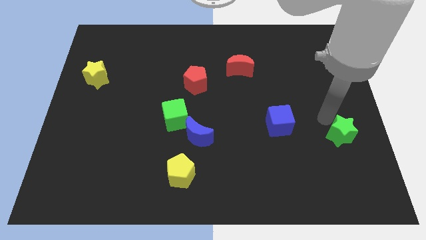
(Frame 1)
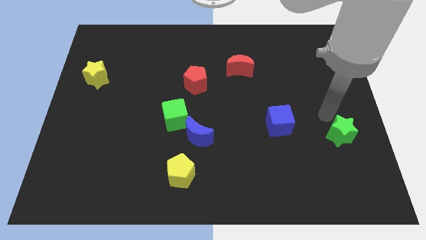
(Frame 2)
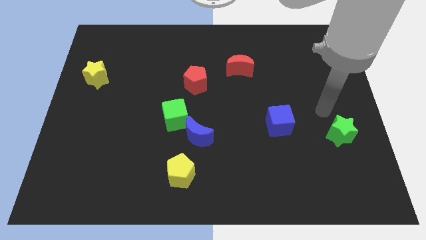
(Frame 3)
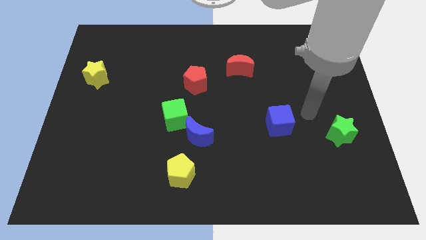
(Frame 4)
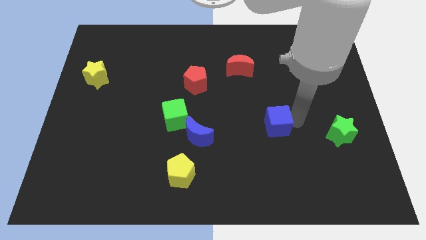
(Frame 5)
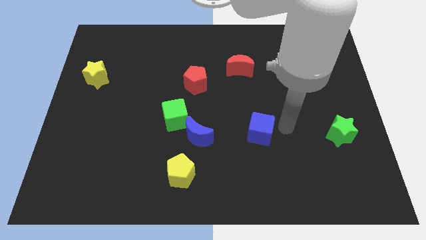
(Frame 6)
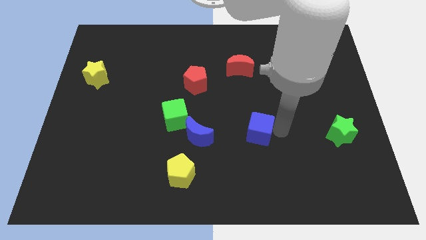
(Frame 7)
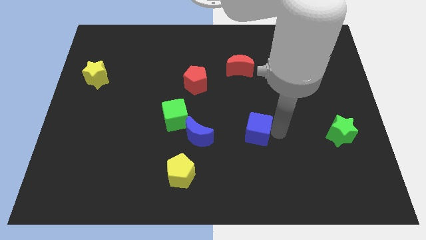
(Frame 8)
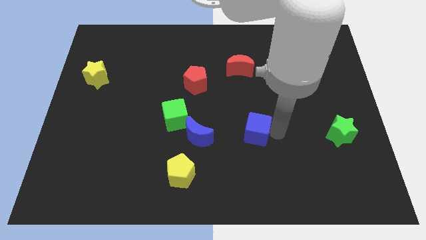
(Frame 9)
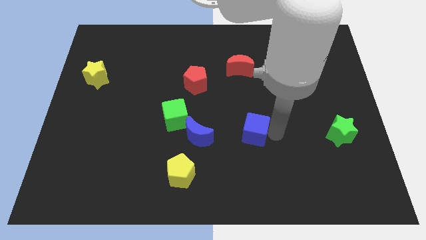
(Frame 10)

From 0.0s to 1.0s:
place the blue cube parallel to blue moon

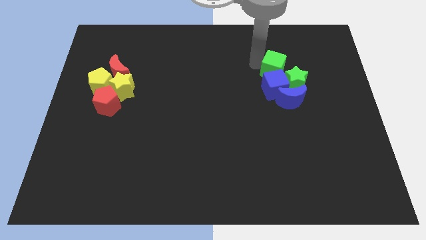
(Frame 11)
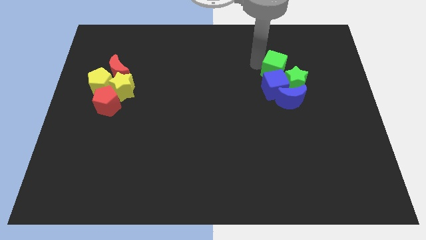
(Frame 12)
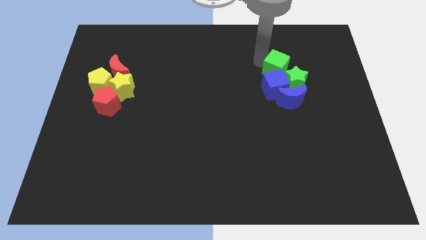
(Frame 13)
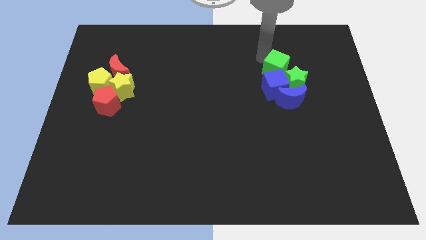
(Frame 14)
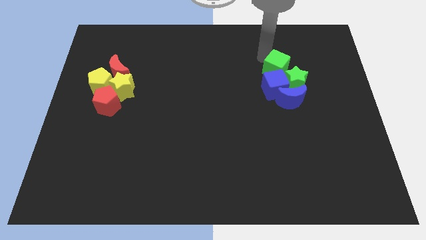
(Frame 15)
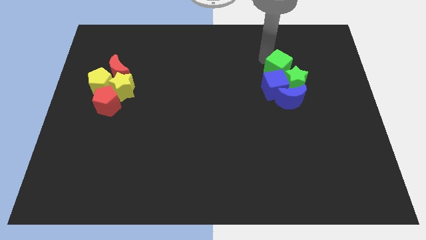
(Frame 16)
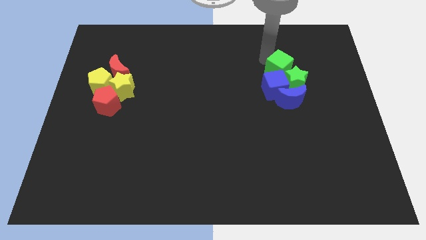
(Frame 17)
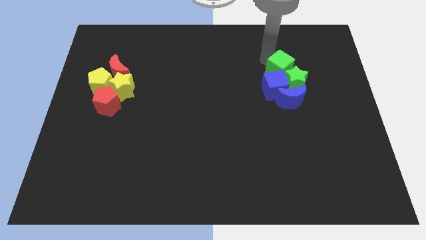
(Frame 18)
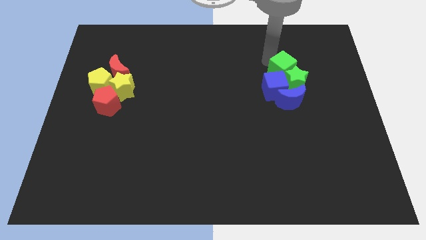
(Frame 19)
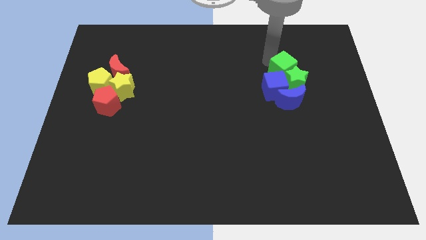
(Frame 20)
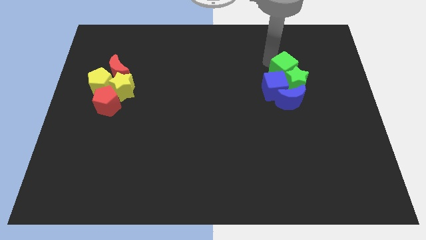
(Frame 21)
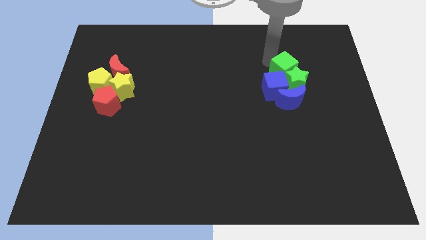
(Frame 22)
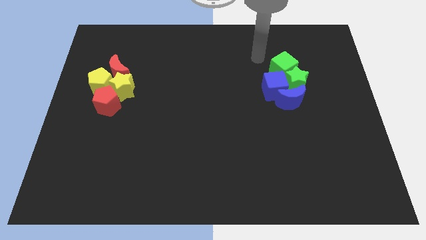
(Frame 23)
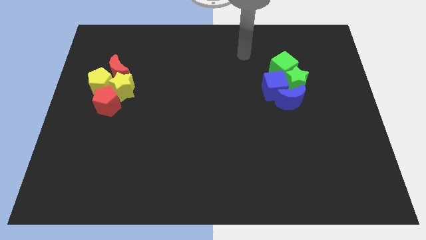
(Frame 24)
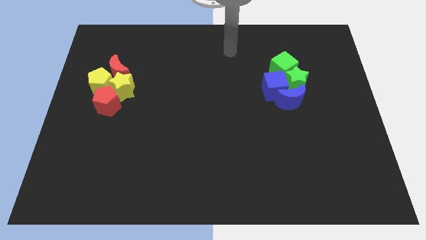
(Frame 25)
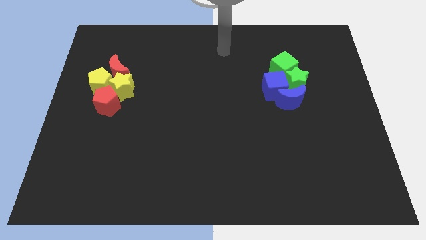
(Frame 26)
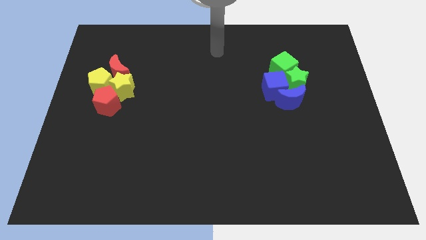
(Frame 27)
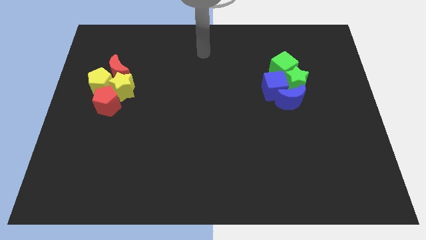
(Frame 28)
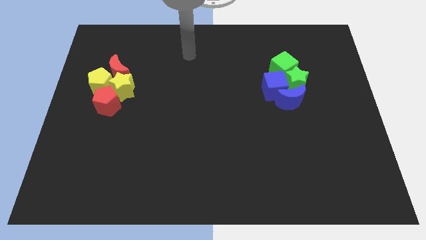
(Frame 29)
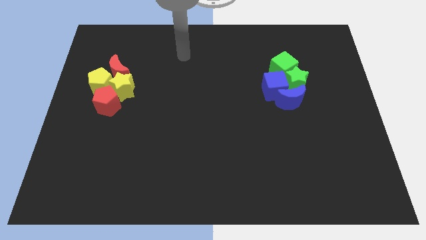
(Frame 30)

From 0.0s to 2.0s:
slightly push the green cube into the green star

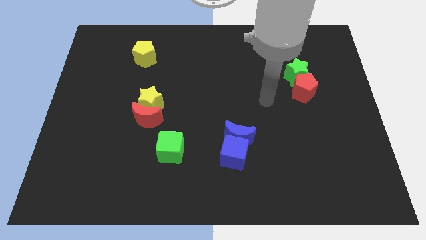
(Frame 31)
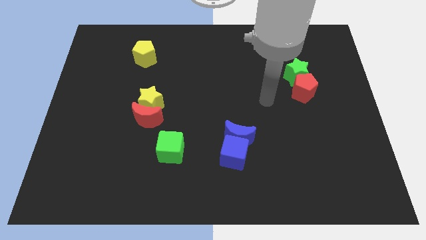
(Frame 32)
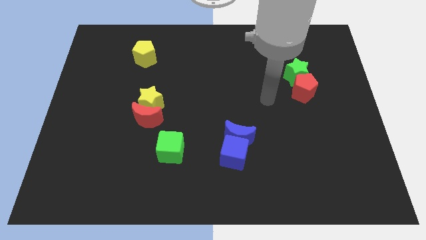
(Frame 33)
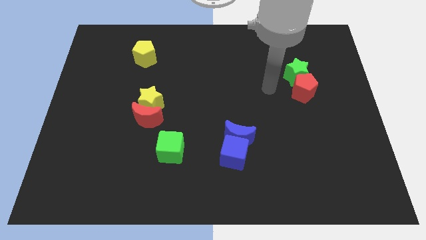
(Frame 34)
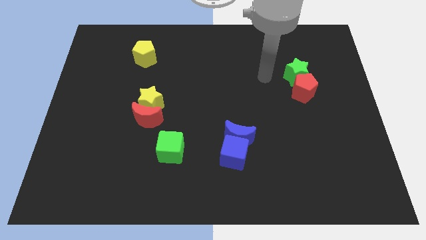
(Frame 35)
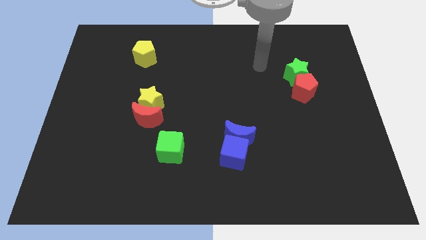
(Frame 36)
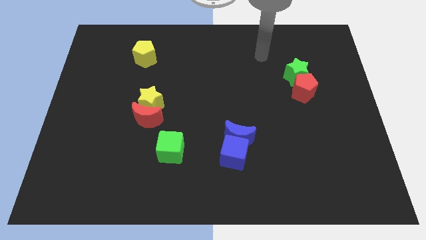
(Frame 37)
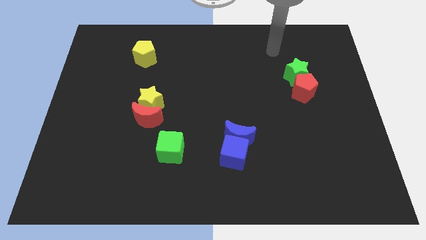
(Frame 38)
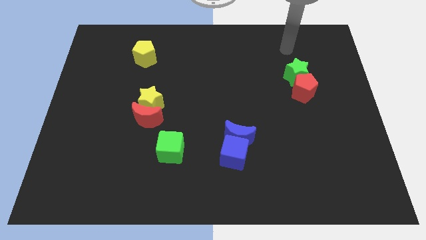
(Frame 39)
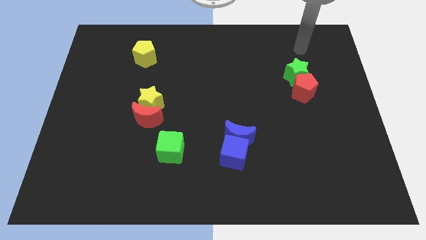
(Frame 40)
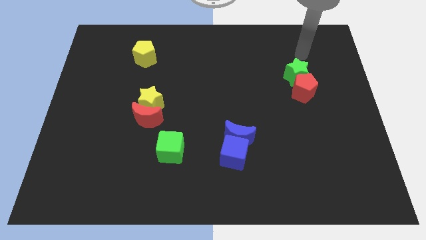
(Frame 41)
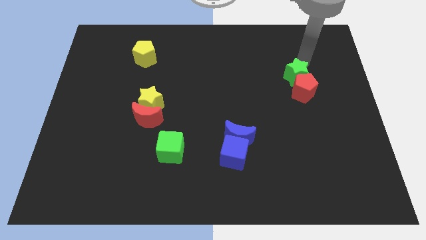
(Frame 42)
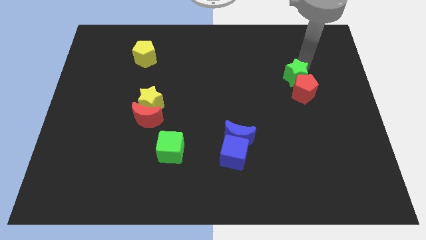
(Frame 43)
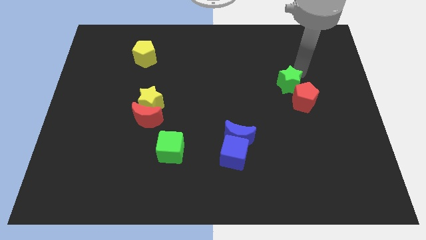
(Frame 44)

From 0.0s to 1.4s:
move your arm close to the green star

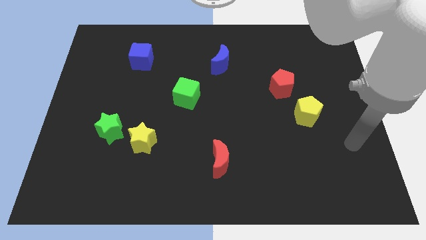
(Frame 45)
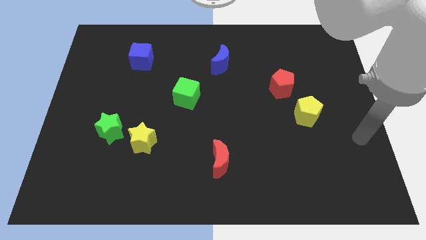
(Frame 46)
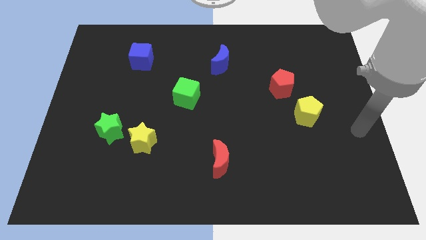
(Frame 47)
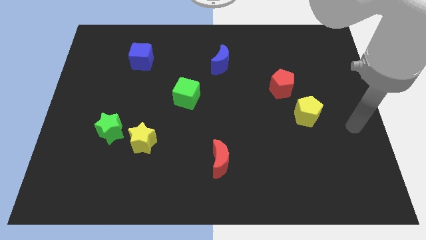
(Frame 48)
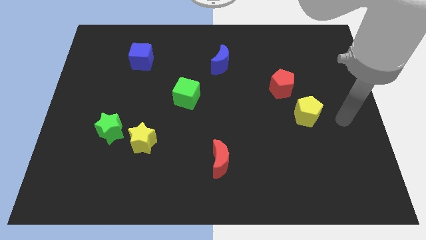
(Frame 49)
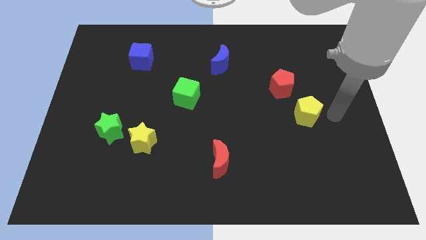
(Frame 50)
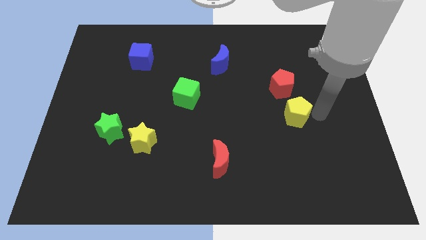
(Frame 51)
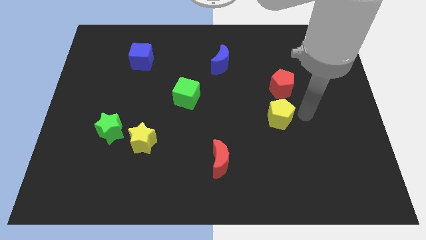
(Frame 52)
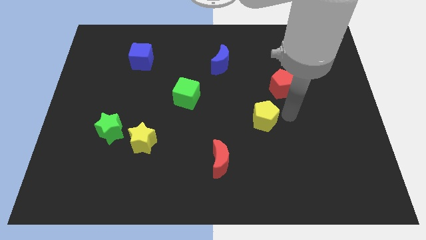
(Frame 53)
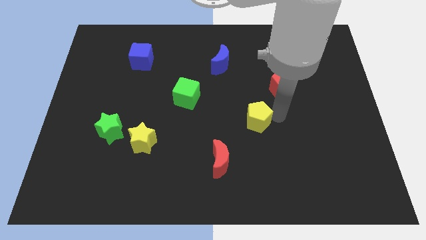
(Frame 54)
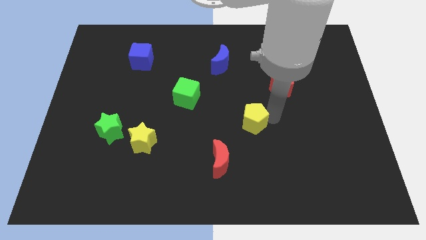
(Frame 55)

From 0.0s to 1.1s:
move yellow pentagon slightly left

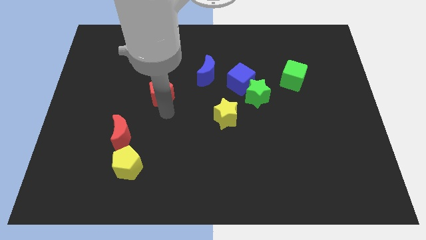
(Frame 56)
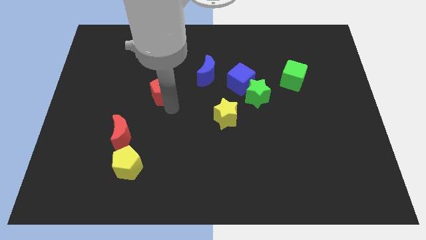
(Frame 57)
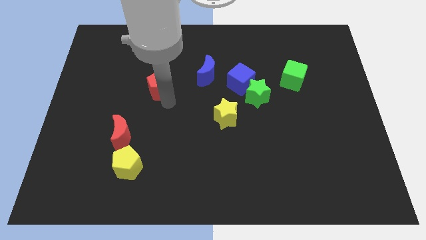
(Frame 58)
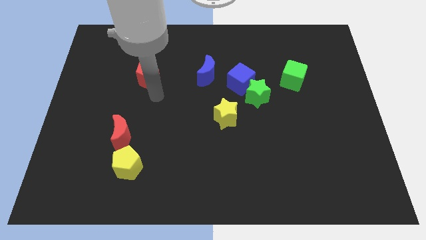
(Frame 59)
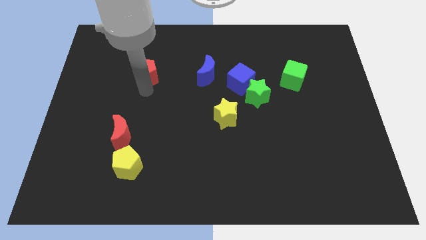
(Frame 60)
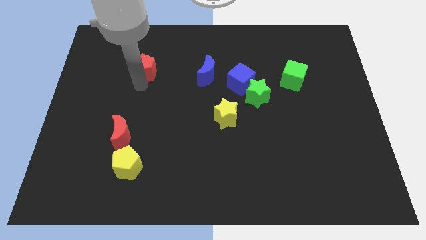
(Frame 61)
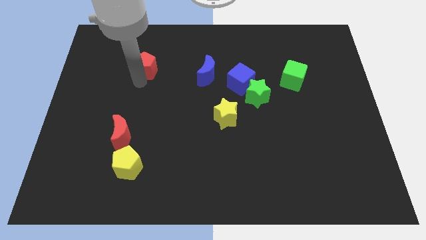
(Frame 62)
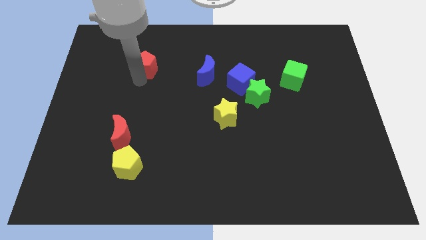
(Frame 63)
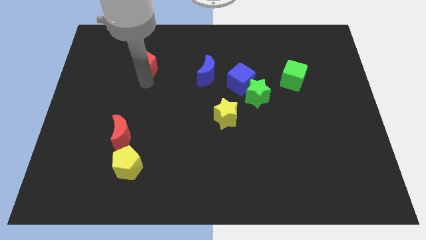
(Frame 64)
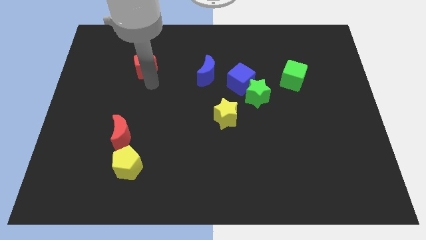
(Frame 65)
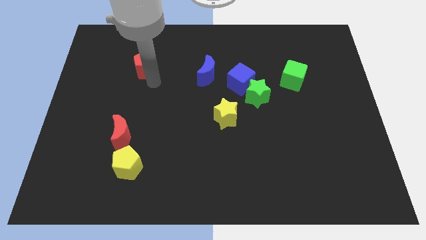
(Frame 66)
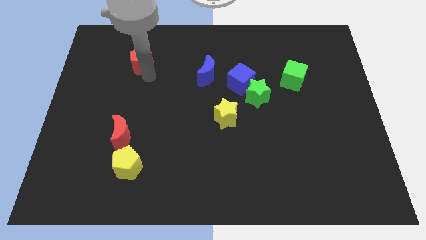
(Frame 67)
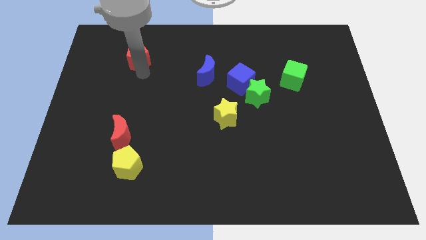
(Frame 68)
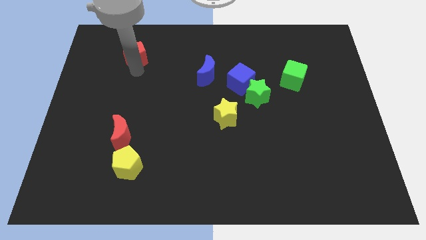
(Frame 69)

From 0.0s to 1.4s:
place the red pentagon left to the blue moon

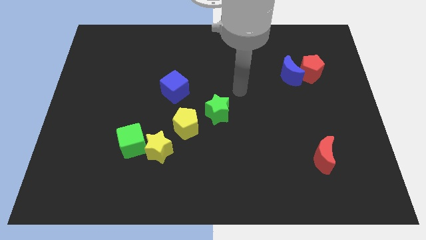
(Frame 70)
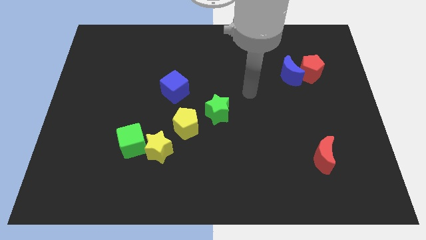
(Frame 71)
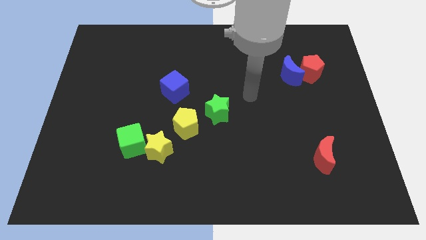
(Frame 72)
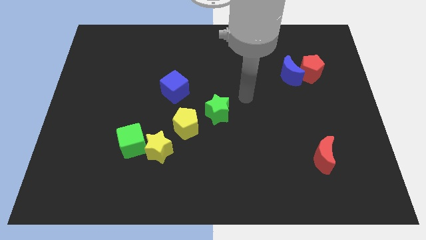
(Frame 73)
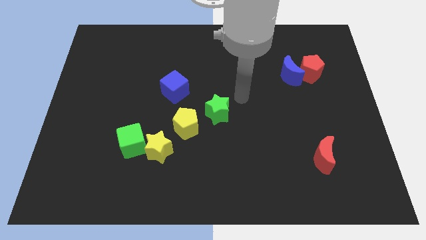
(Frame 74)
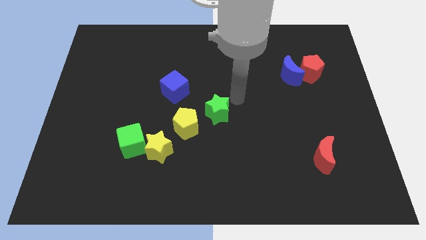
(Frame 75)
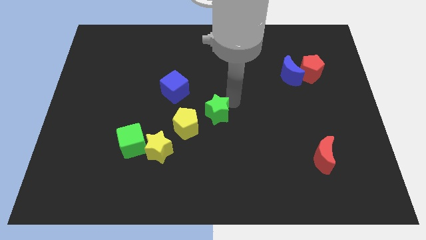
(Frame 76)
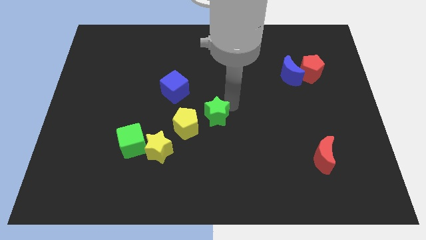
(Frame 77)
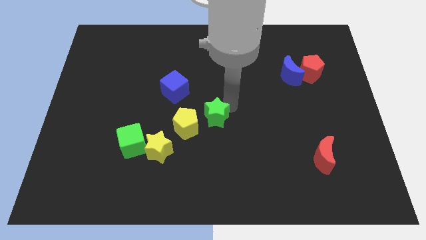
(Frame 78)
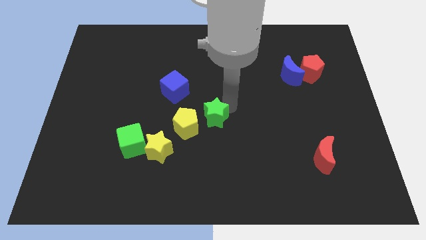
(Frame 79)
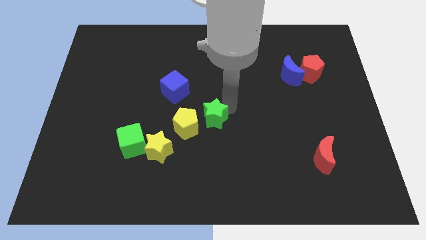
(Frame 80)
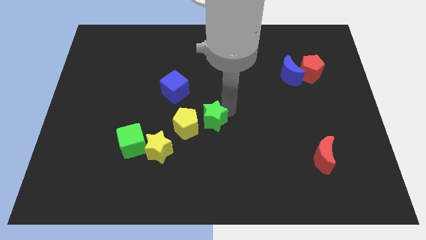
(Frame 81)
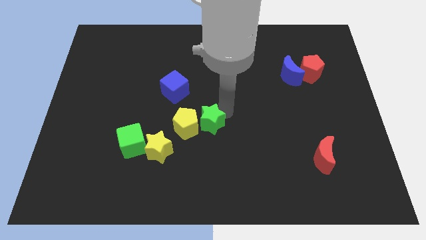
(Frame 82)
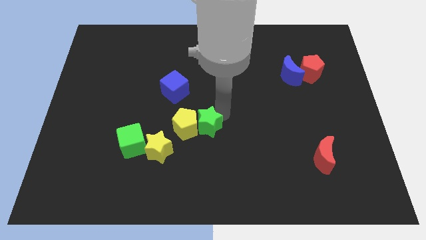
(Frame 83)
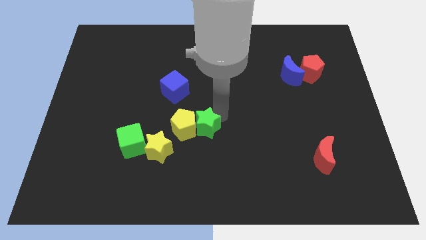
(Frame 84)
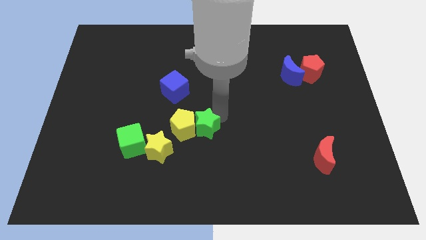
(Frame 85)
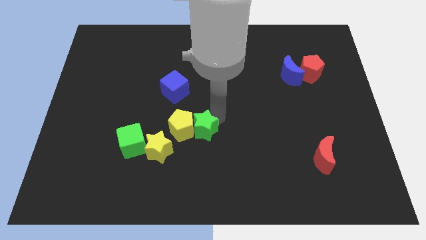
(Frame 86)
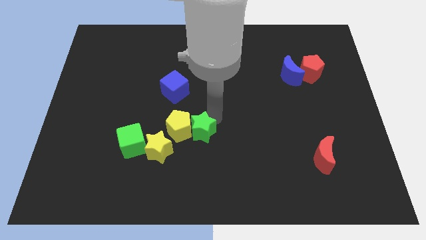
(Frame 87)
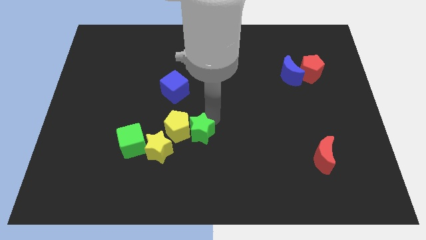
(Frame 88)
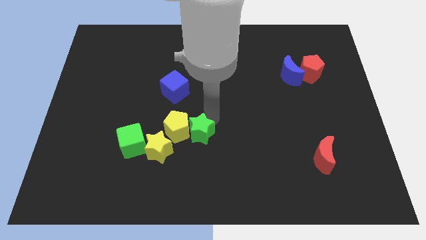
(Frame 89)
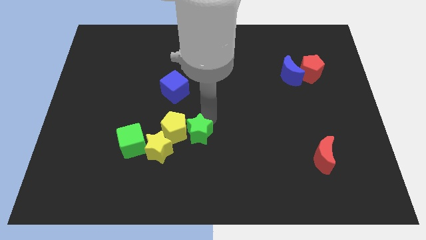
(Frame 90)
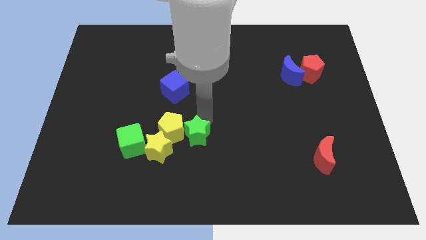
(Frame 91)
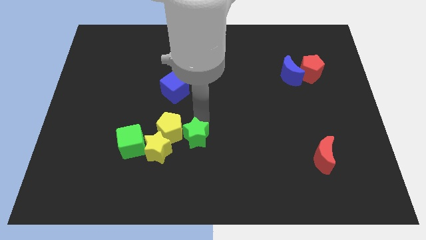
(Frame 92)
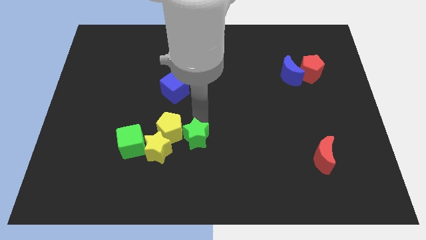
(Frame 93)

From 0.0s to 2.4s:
push green star to the right of yellow pentagon
